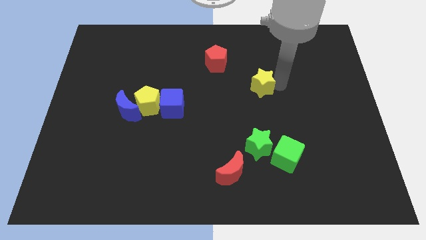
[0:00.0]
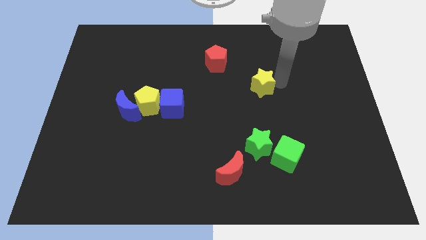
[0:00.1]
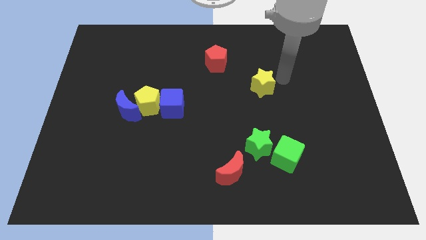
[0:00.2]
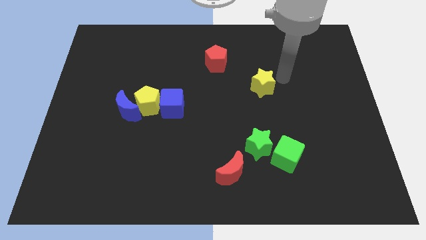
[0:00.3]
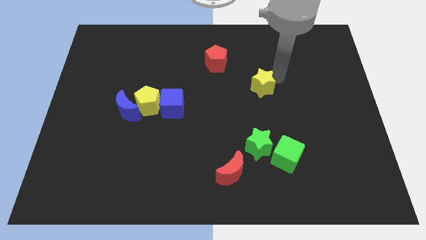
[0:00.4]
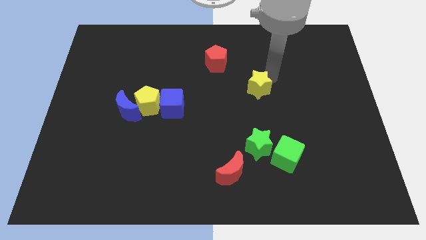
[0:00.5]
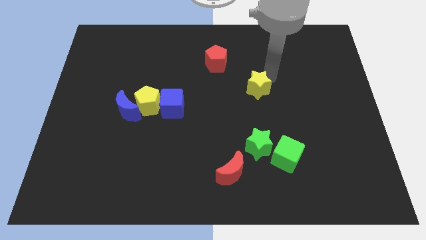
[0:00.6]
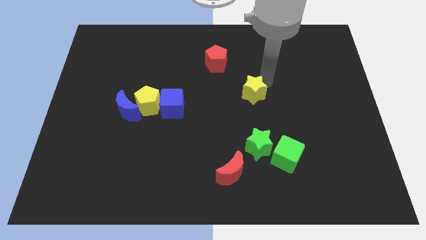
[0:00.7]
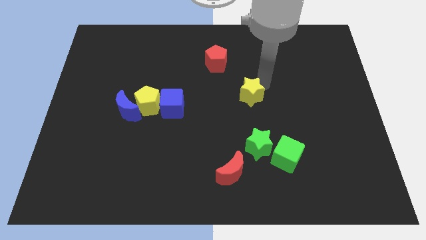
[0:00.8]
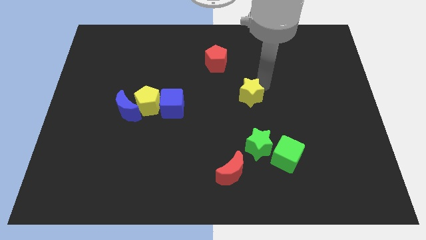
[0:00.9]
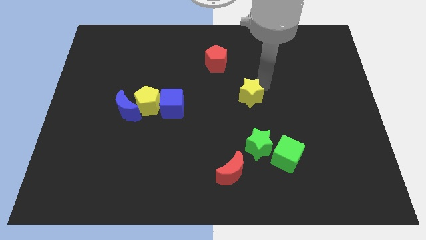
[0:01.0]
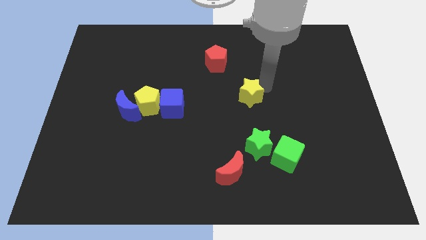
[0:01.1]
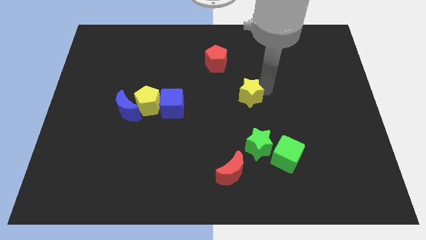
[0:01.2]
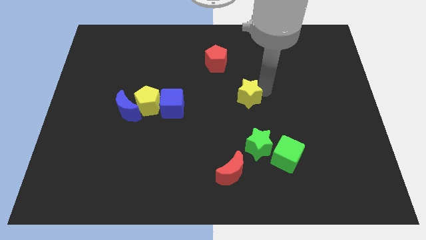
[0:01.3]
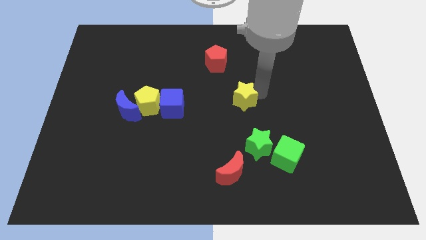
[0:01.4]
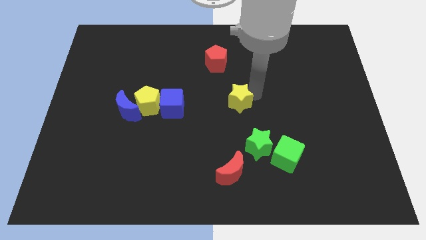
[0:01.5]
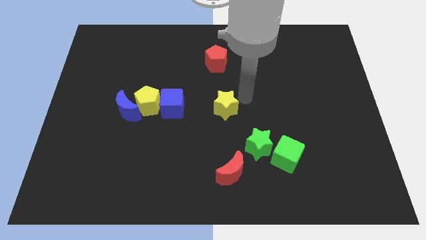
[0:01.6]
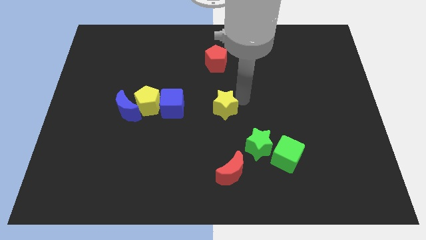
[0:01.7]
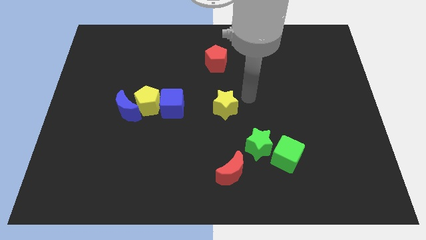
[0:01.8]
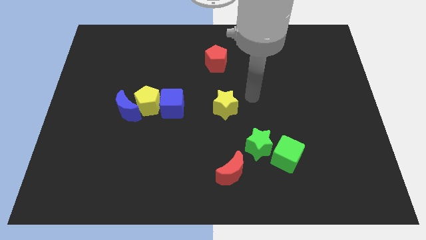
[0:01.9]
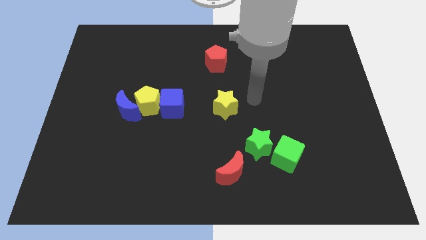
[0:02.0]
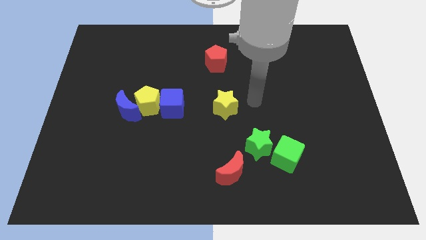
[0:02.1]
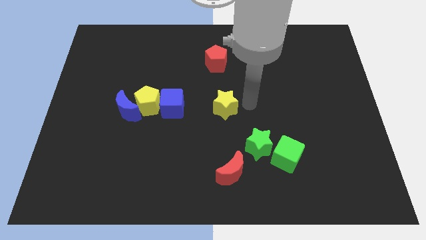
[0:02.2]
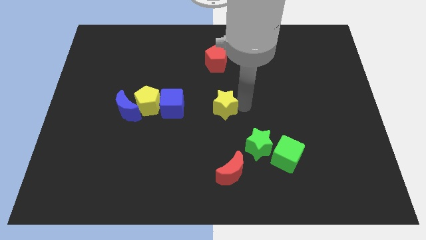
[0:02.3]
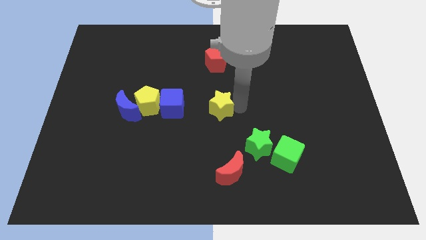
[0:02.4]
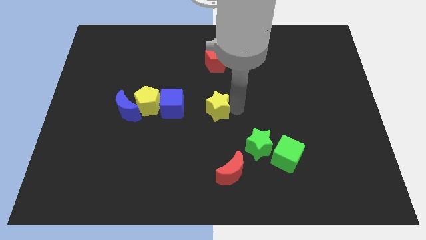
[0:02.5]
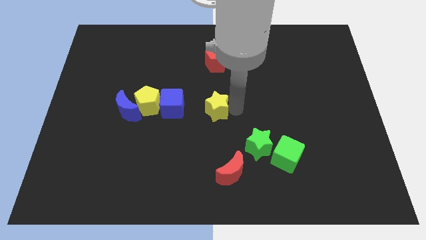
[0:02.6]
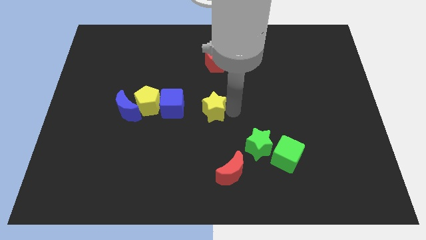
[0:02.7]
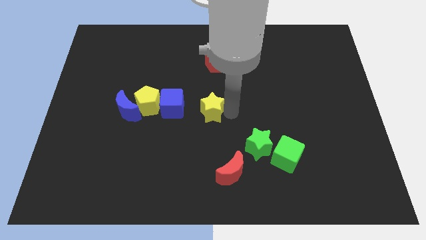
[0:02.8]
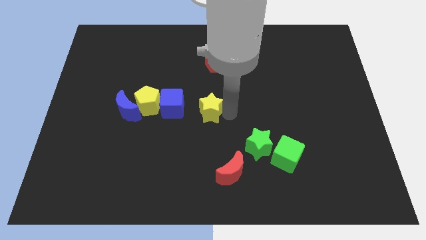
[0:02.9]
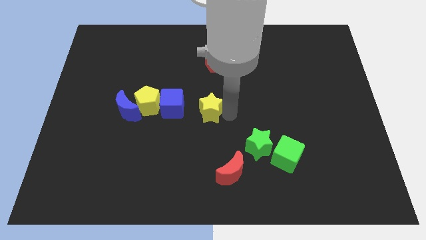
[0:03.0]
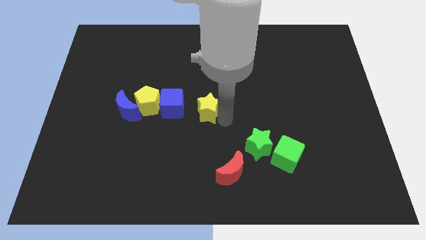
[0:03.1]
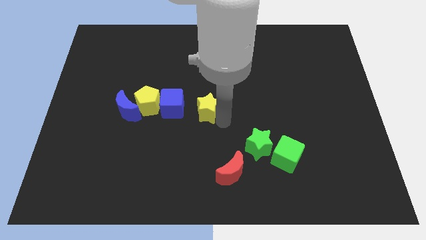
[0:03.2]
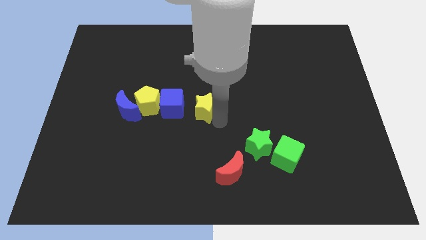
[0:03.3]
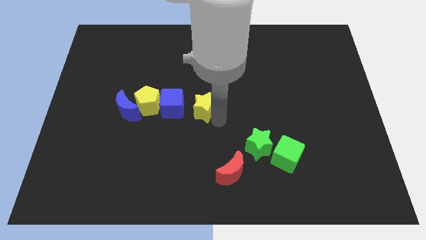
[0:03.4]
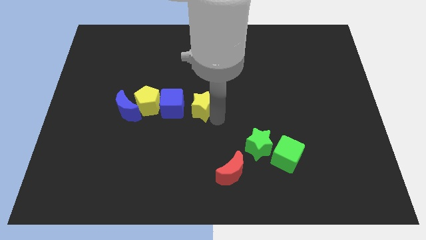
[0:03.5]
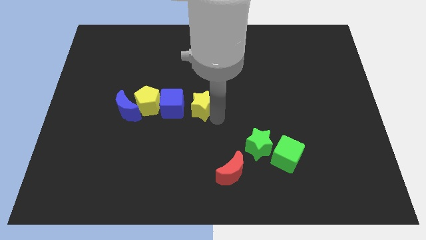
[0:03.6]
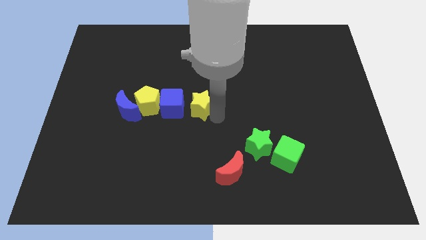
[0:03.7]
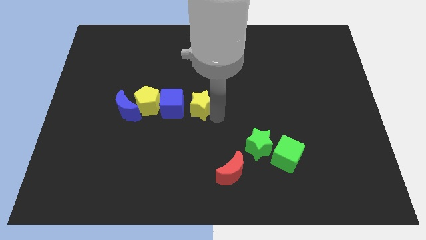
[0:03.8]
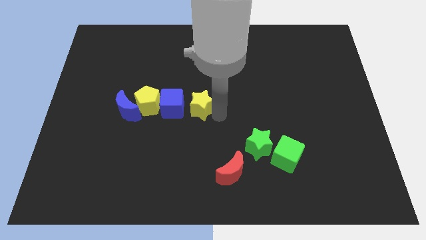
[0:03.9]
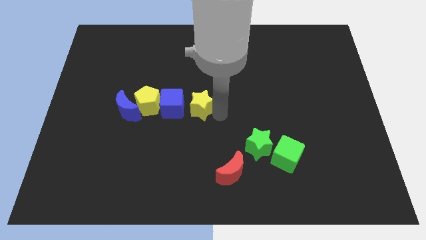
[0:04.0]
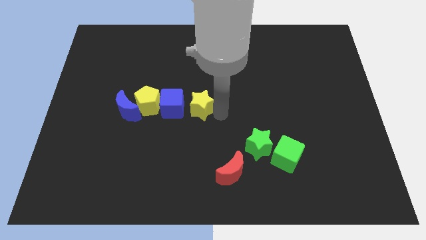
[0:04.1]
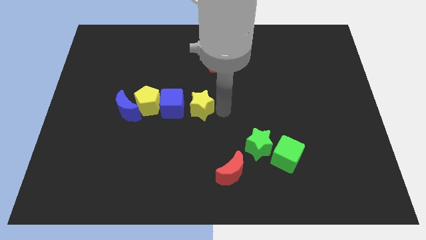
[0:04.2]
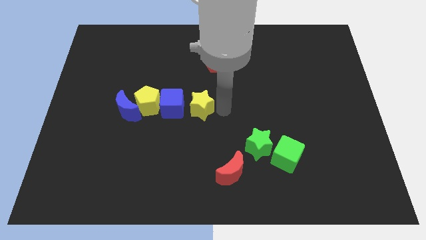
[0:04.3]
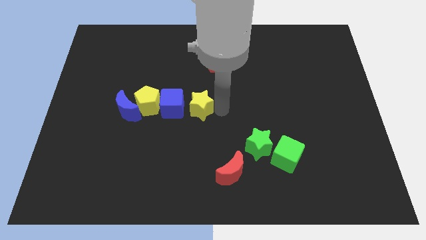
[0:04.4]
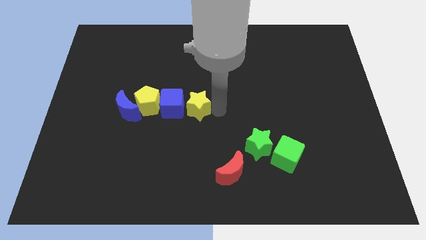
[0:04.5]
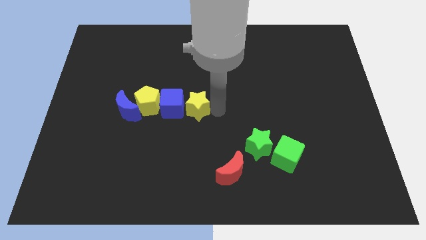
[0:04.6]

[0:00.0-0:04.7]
push the yellow star close to the right side of the blue cube

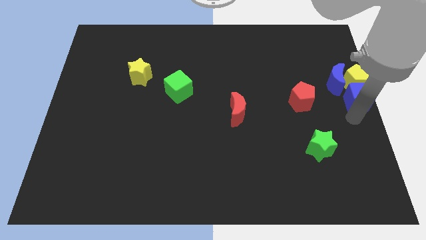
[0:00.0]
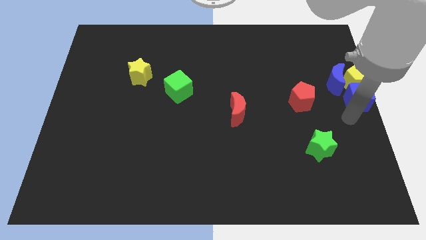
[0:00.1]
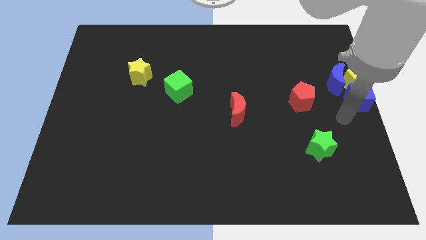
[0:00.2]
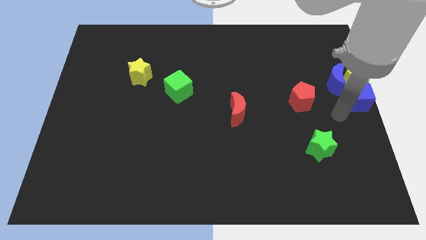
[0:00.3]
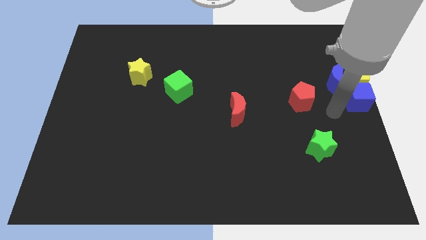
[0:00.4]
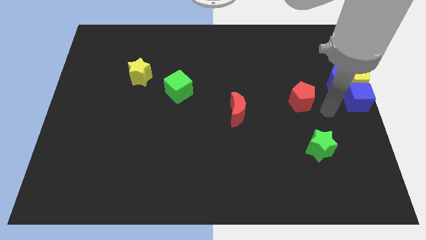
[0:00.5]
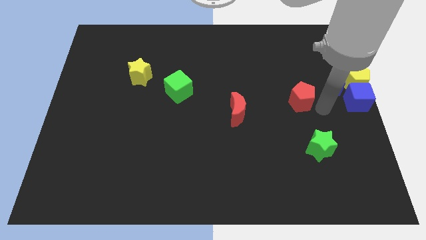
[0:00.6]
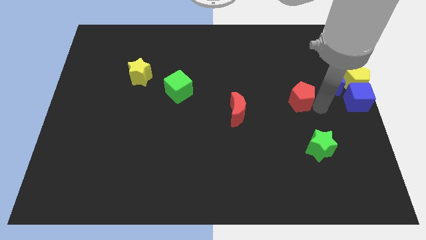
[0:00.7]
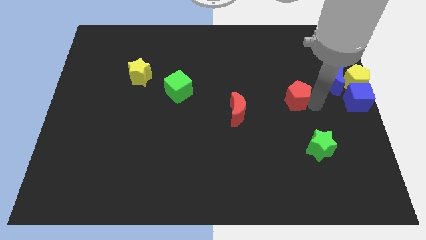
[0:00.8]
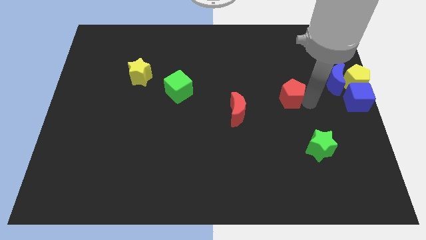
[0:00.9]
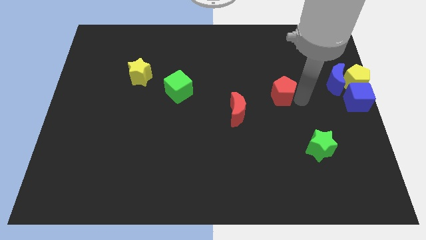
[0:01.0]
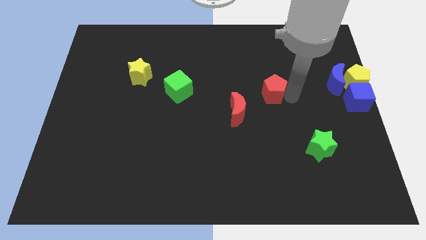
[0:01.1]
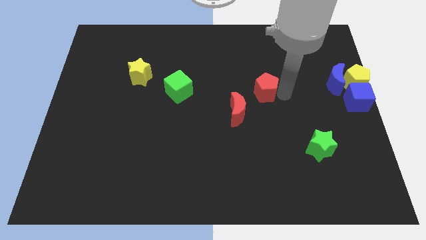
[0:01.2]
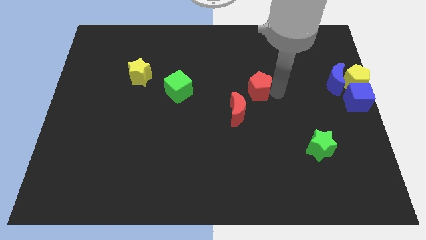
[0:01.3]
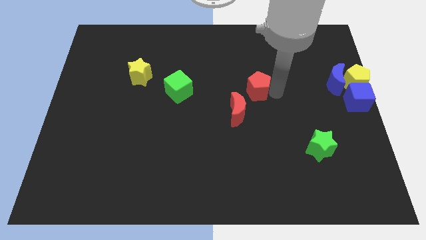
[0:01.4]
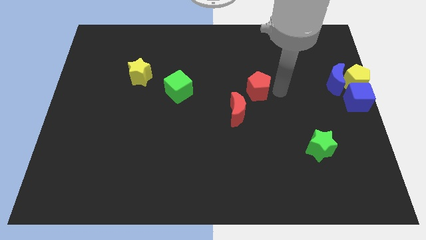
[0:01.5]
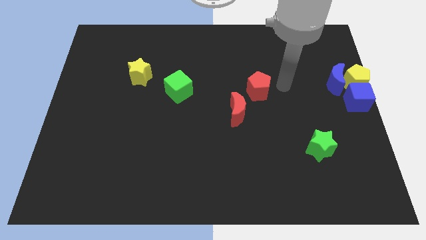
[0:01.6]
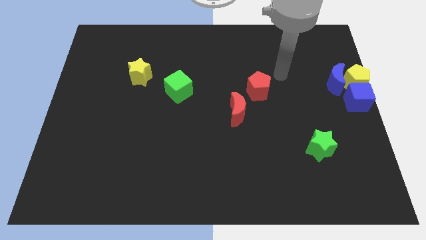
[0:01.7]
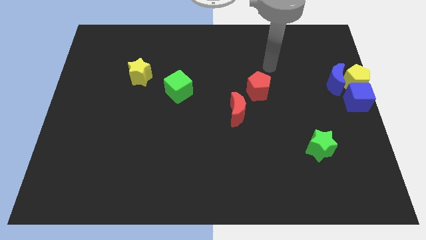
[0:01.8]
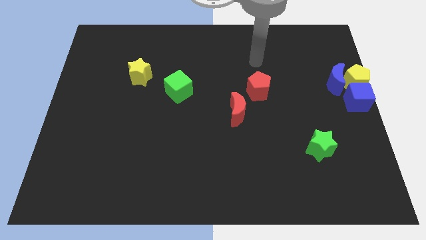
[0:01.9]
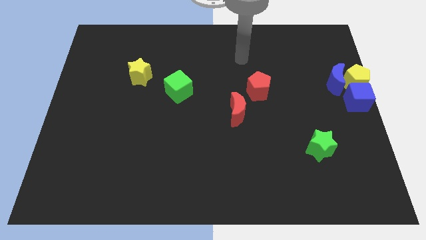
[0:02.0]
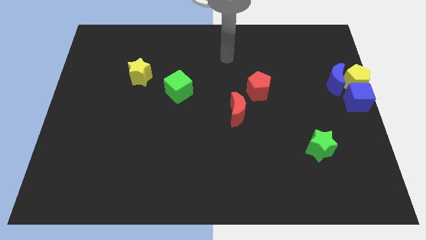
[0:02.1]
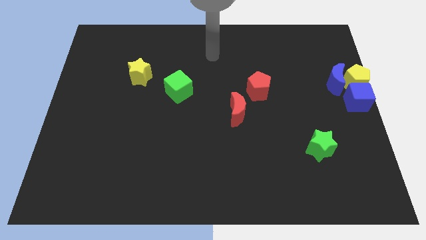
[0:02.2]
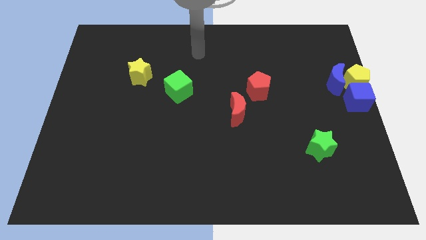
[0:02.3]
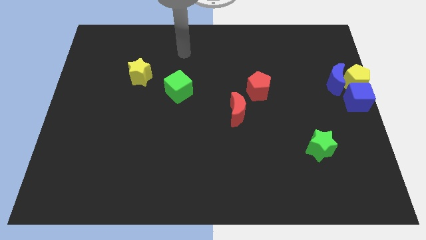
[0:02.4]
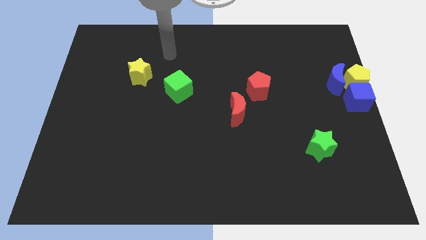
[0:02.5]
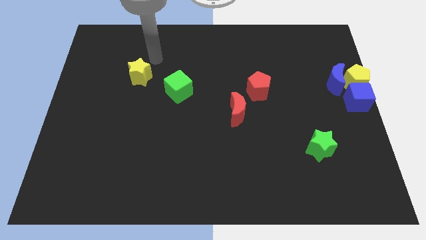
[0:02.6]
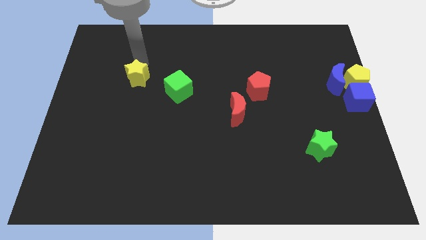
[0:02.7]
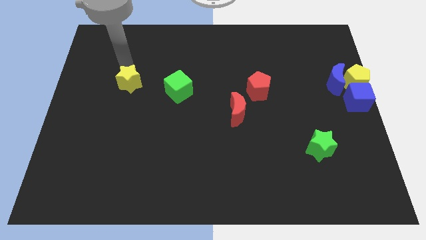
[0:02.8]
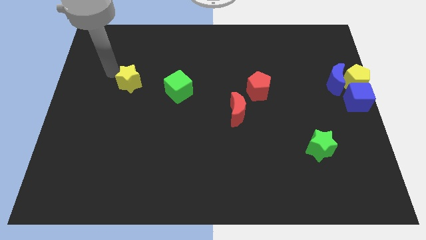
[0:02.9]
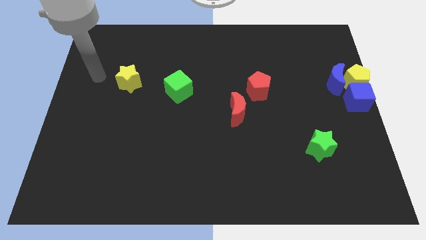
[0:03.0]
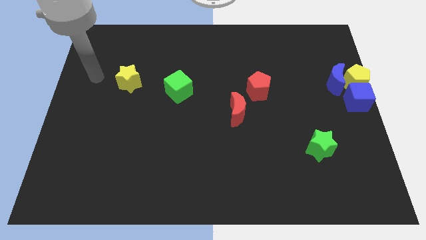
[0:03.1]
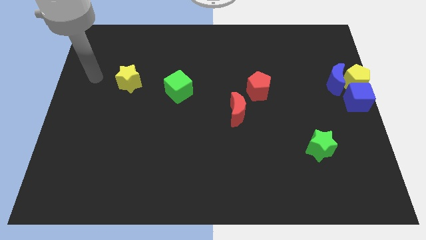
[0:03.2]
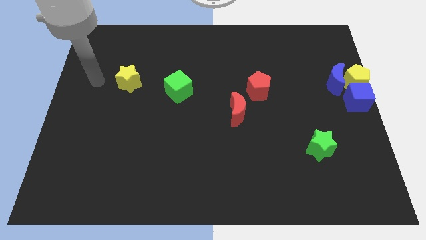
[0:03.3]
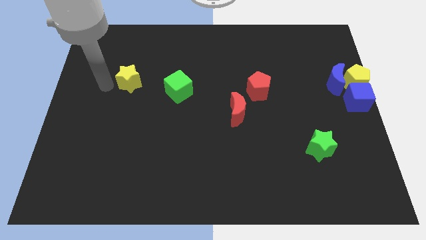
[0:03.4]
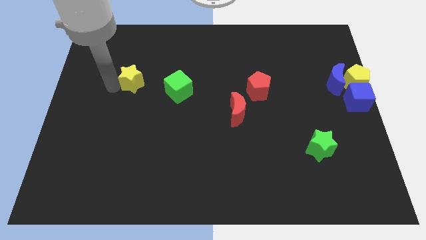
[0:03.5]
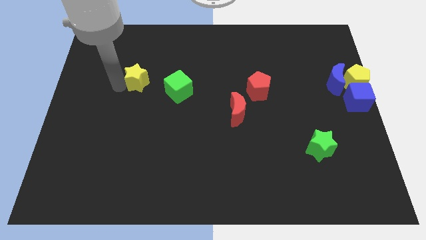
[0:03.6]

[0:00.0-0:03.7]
move the red pentagon to the left

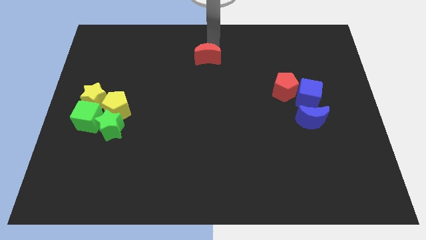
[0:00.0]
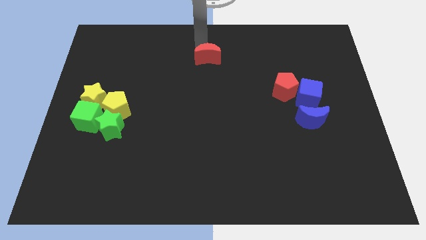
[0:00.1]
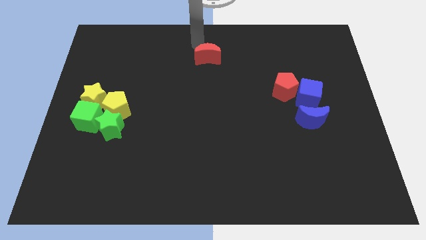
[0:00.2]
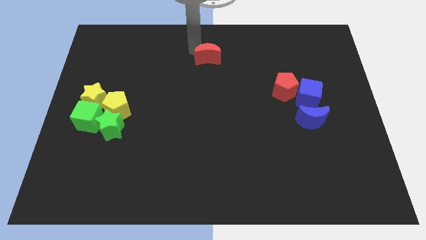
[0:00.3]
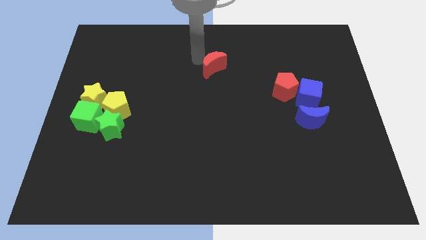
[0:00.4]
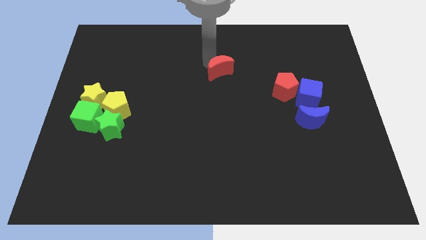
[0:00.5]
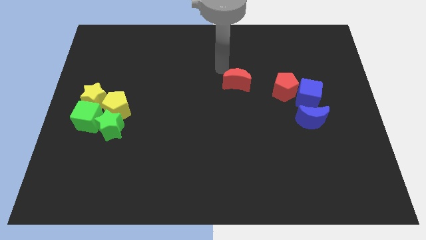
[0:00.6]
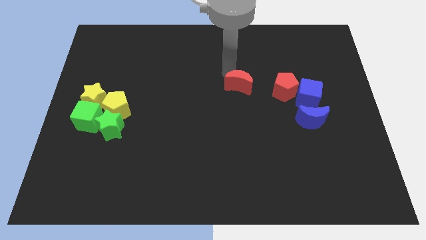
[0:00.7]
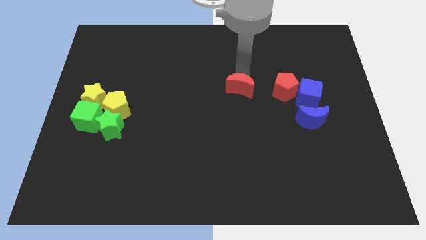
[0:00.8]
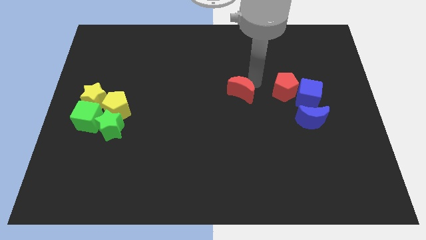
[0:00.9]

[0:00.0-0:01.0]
push the red crescent left to the red pentagon
